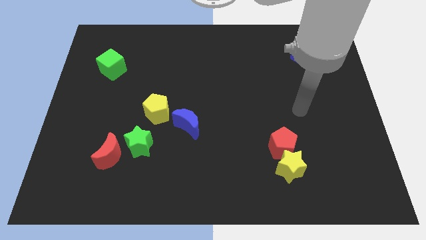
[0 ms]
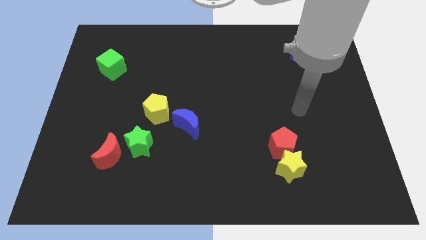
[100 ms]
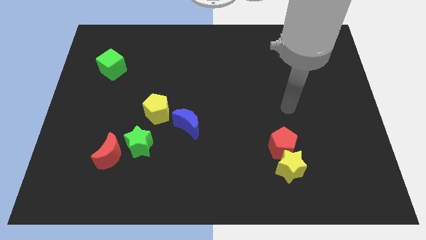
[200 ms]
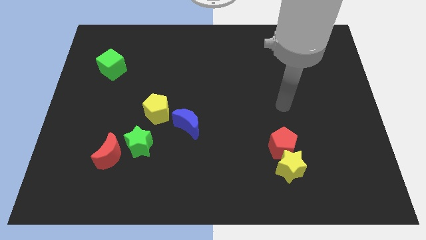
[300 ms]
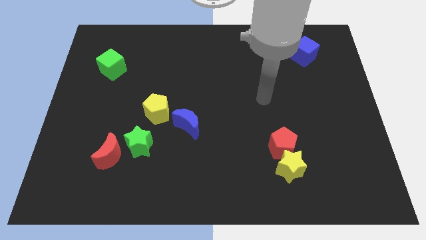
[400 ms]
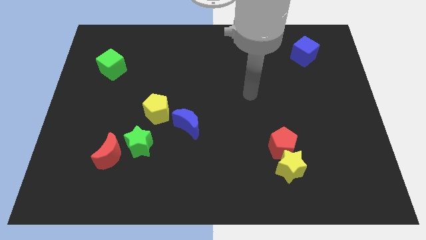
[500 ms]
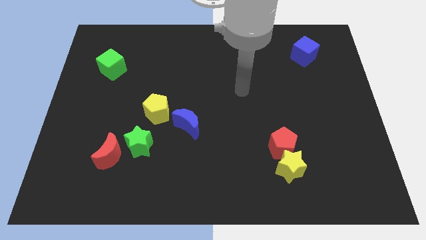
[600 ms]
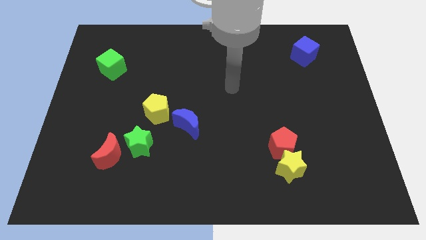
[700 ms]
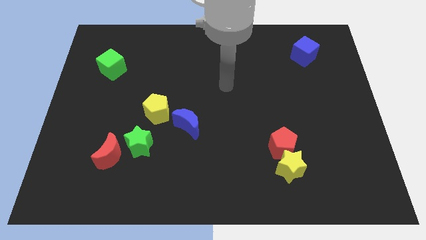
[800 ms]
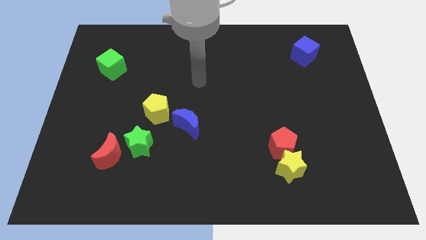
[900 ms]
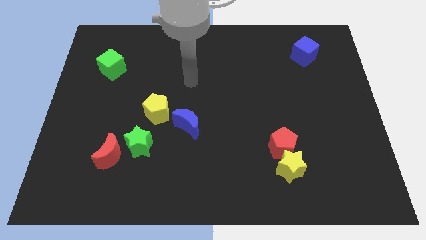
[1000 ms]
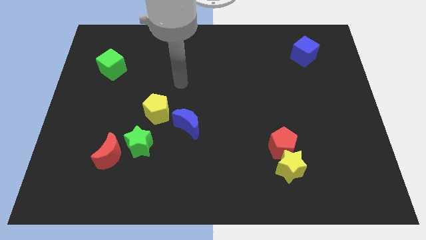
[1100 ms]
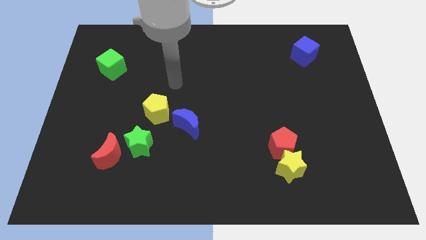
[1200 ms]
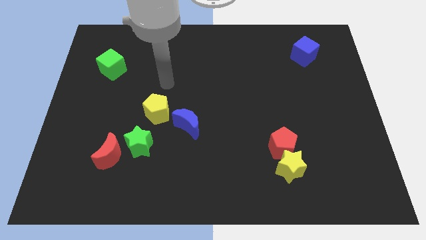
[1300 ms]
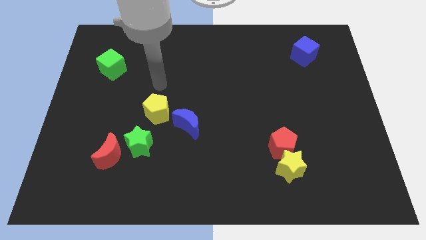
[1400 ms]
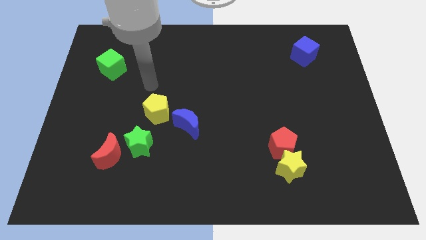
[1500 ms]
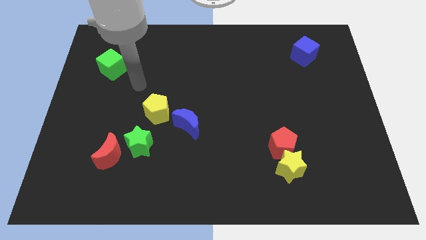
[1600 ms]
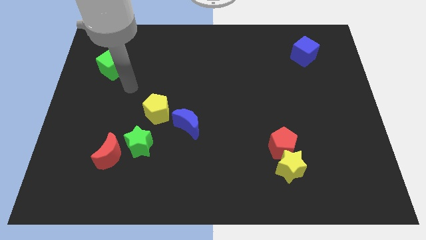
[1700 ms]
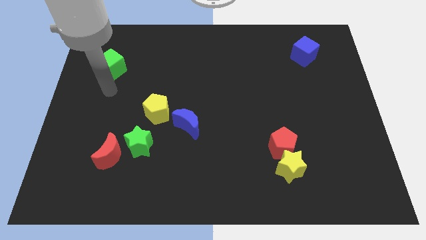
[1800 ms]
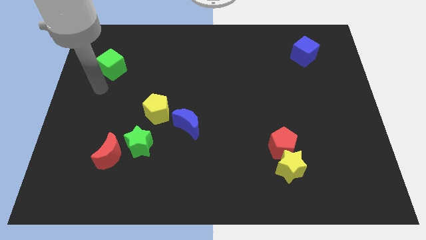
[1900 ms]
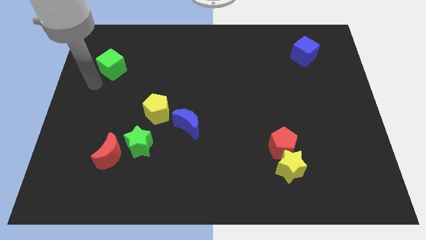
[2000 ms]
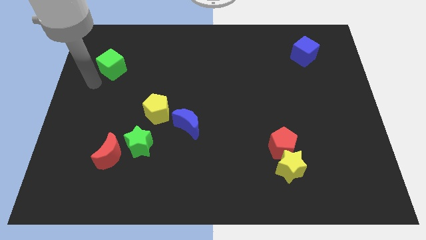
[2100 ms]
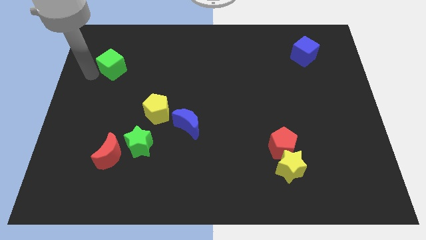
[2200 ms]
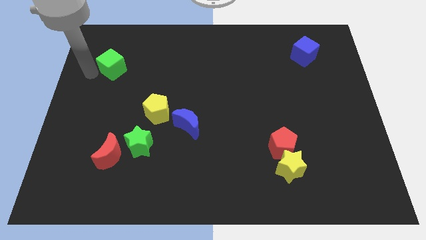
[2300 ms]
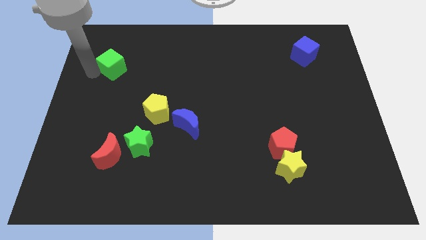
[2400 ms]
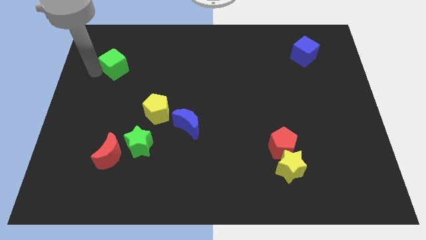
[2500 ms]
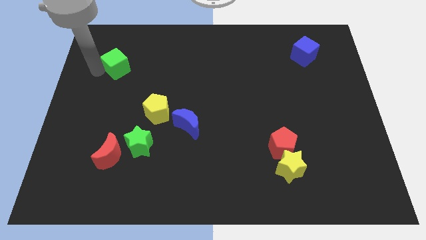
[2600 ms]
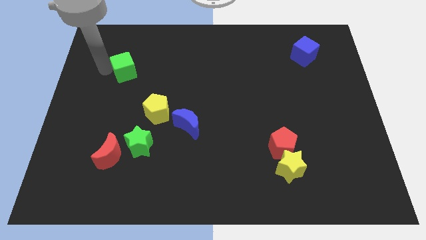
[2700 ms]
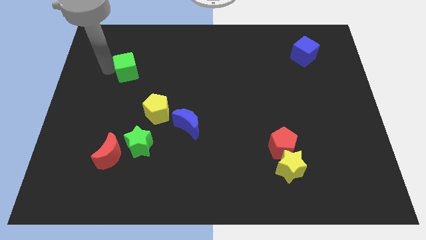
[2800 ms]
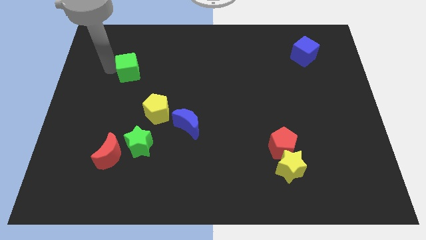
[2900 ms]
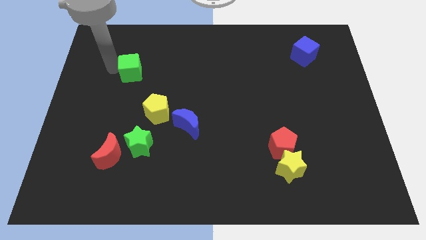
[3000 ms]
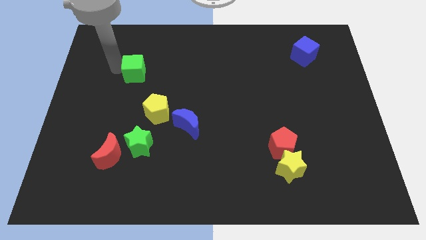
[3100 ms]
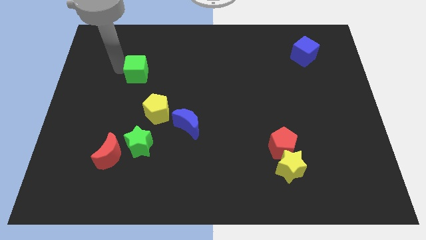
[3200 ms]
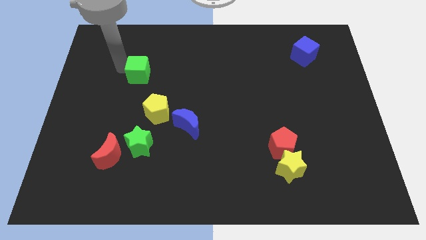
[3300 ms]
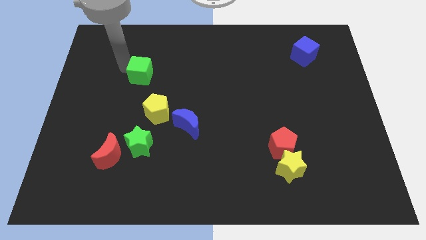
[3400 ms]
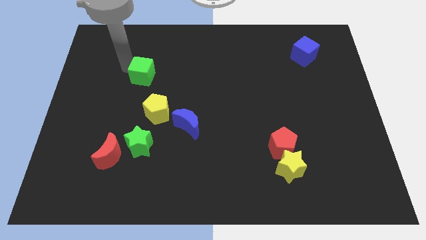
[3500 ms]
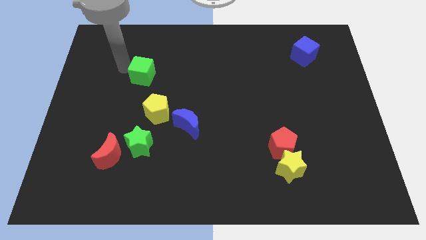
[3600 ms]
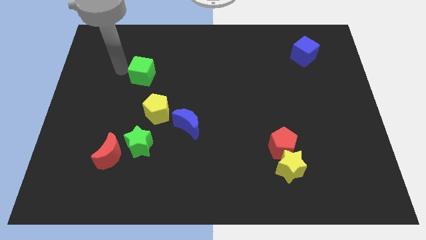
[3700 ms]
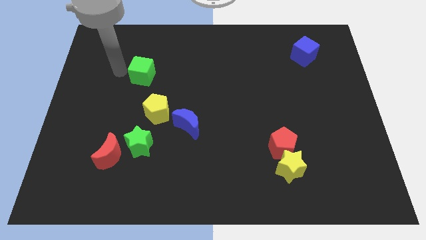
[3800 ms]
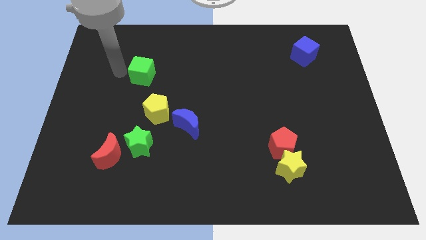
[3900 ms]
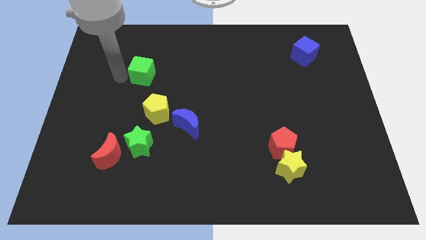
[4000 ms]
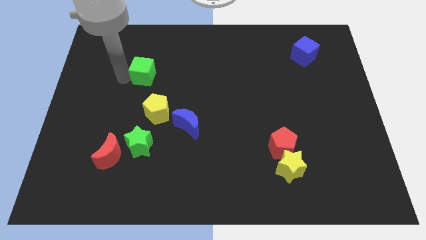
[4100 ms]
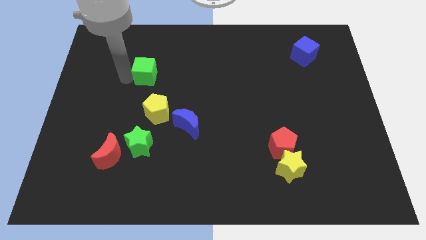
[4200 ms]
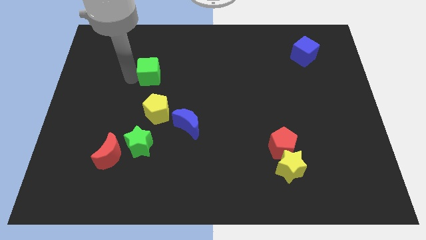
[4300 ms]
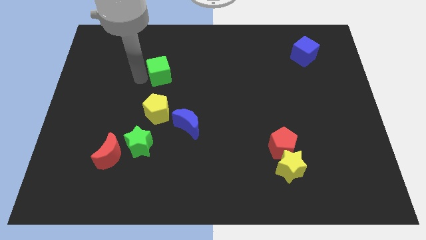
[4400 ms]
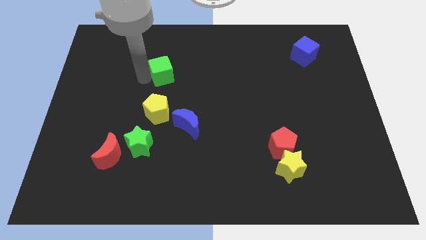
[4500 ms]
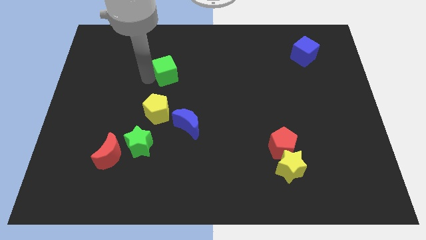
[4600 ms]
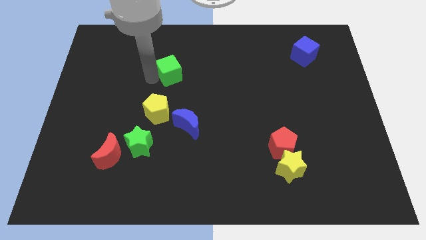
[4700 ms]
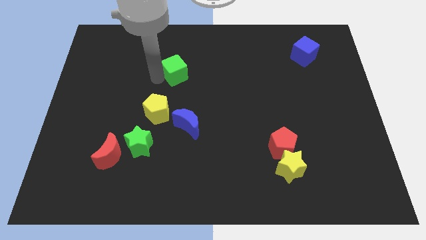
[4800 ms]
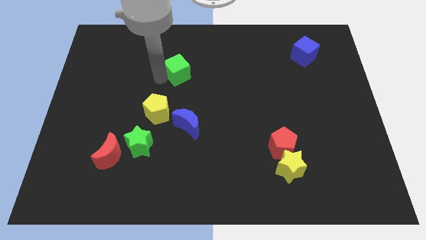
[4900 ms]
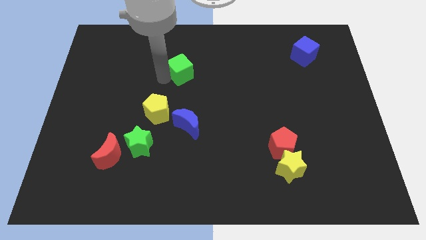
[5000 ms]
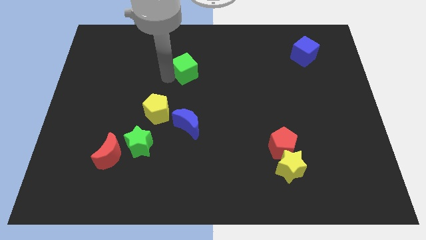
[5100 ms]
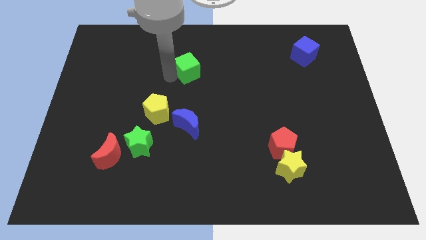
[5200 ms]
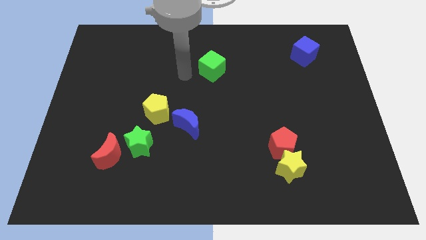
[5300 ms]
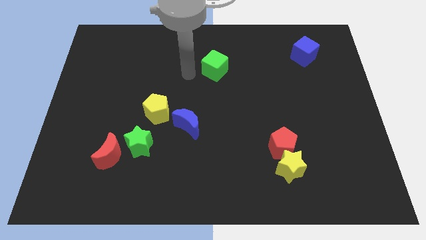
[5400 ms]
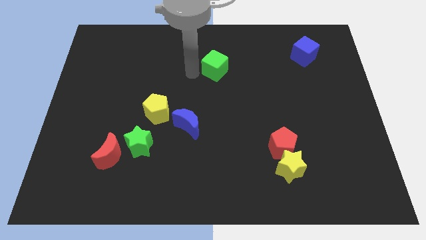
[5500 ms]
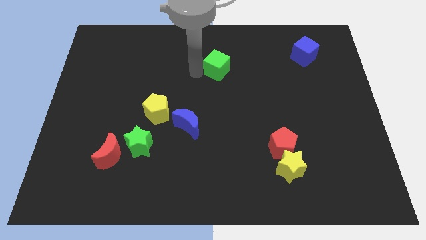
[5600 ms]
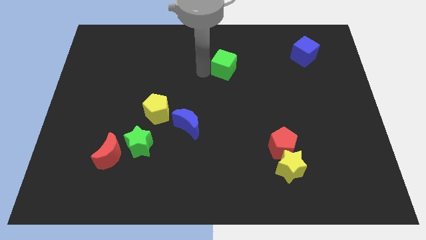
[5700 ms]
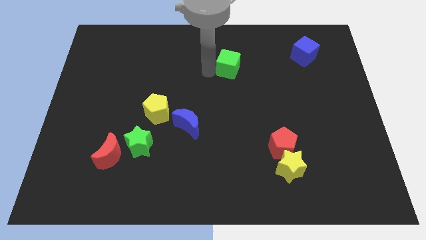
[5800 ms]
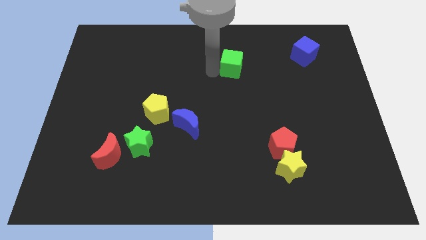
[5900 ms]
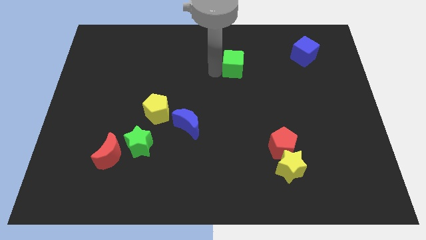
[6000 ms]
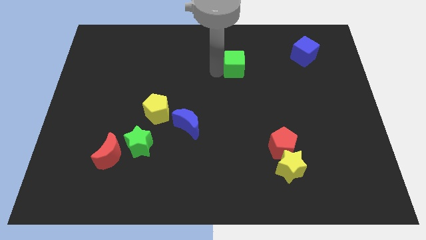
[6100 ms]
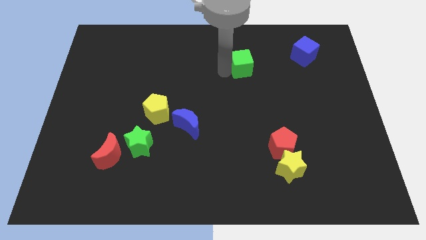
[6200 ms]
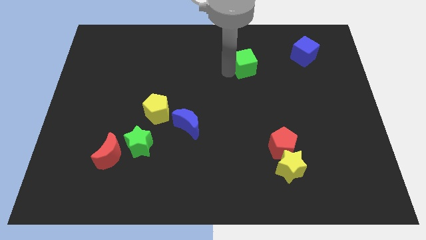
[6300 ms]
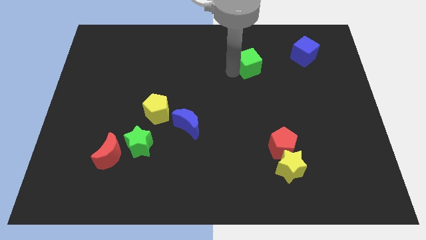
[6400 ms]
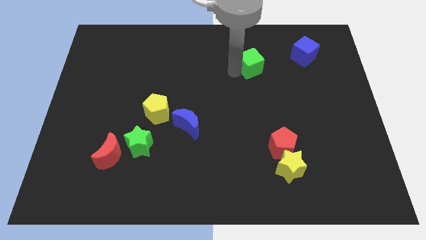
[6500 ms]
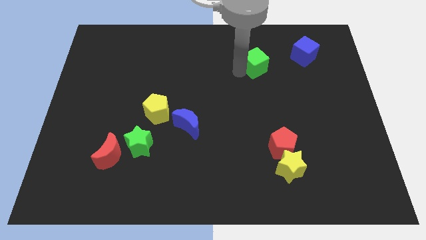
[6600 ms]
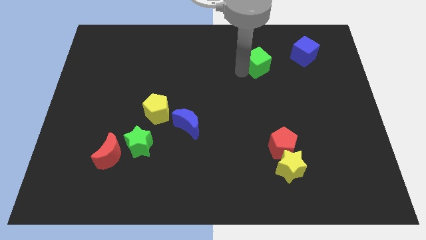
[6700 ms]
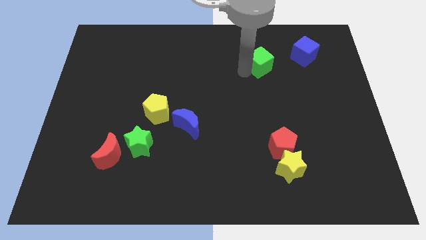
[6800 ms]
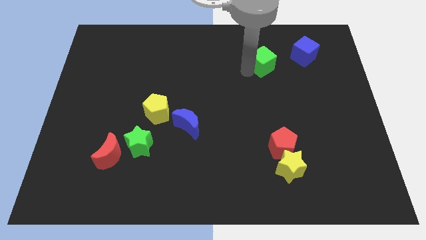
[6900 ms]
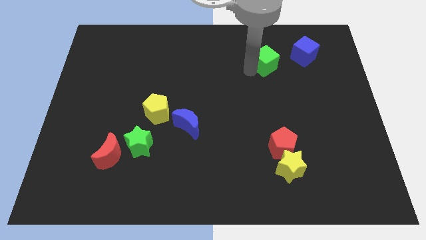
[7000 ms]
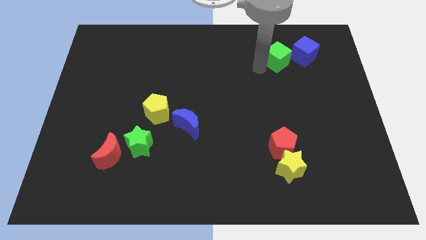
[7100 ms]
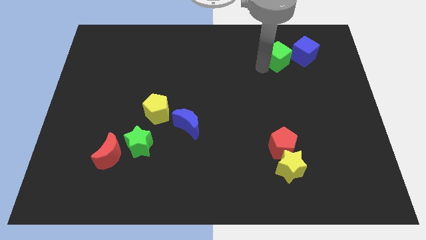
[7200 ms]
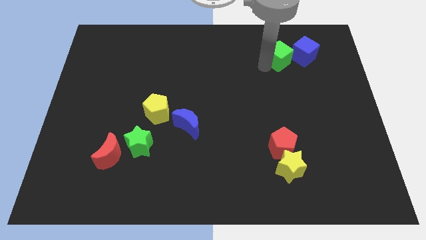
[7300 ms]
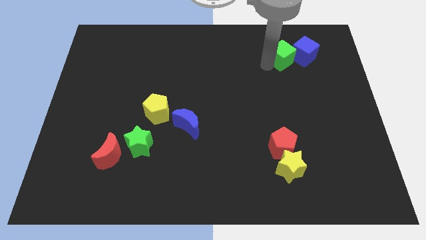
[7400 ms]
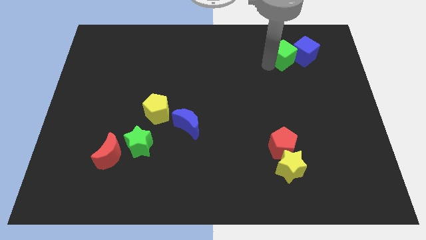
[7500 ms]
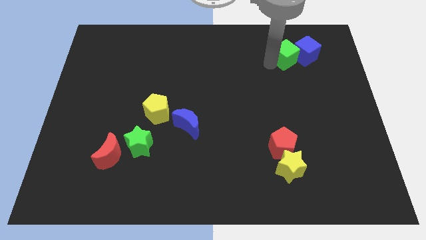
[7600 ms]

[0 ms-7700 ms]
move the green cube next to the blue cube

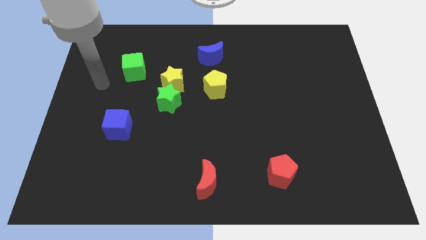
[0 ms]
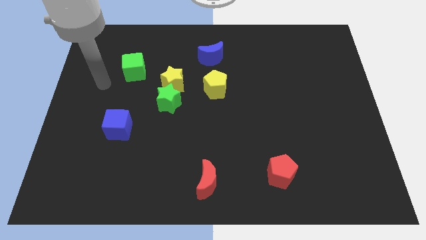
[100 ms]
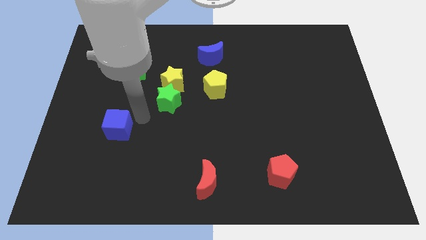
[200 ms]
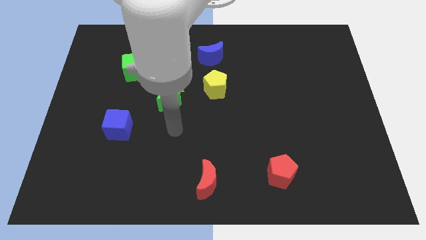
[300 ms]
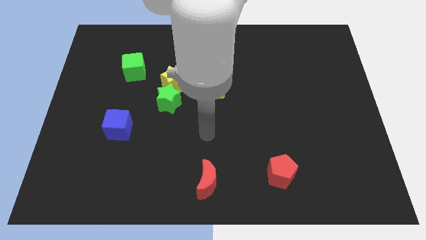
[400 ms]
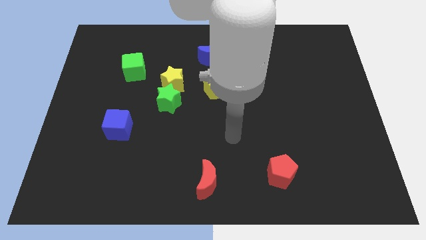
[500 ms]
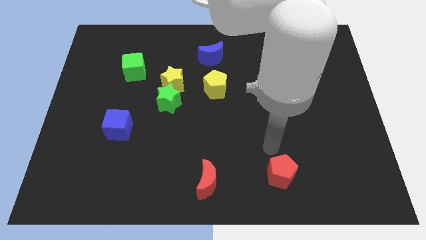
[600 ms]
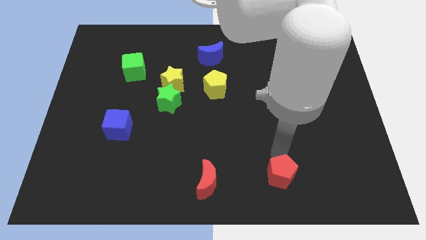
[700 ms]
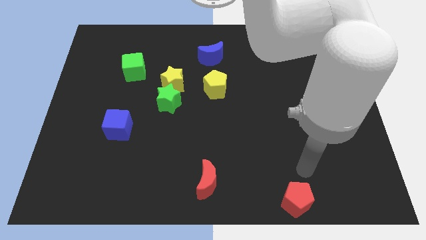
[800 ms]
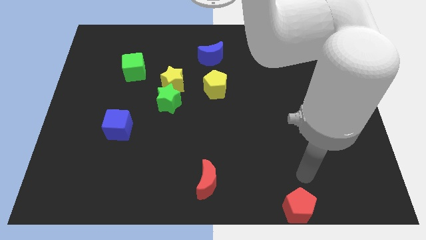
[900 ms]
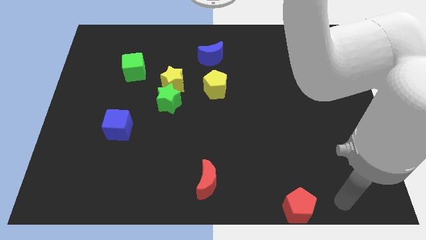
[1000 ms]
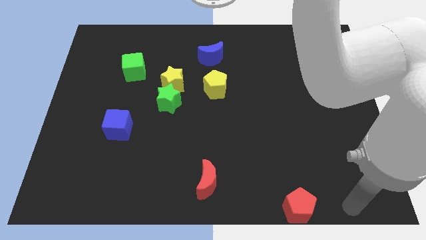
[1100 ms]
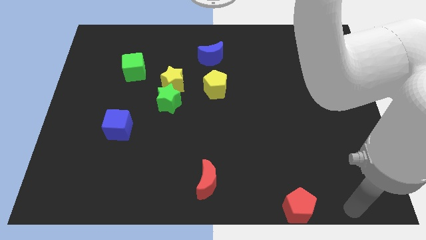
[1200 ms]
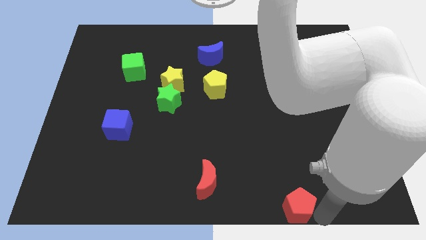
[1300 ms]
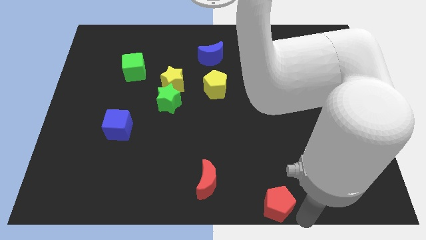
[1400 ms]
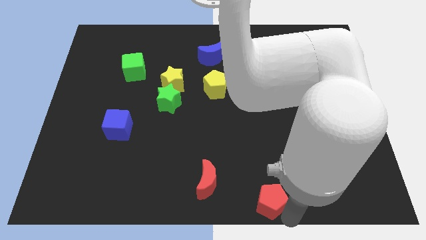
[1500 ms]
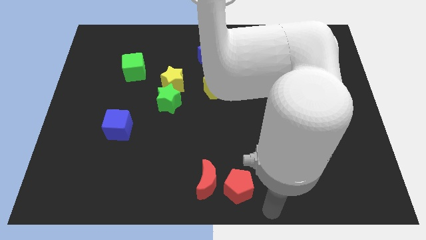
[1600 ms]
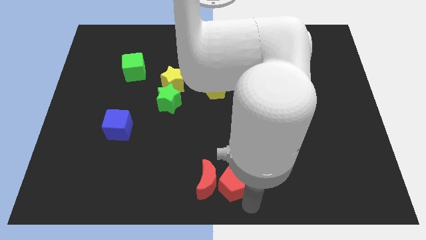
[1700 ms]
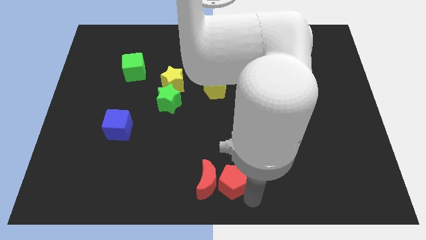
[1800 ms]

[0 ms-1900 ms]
put the red pentagon towards the red moon
